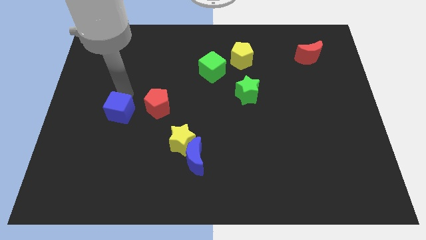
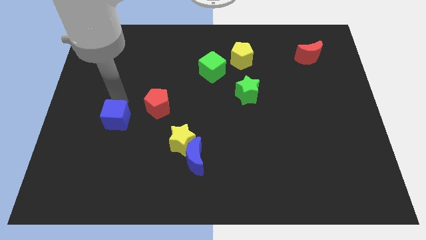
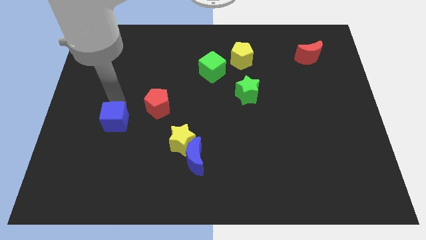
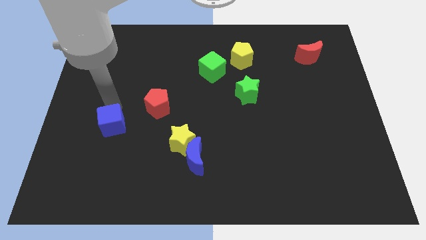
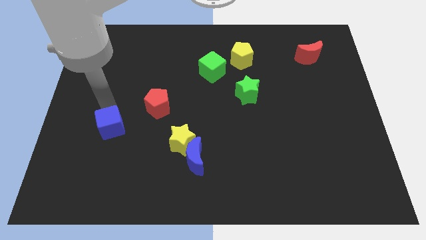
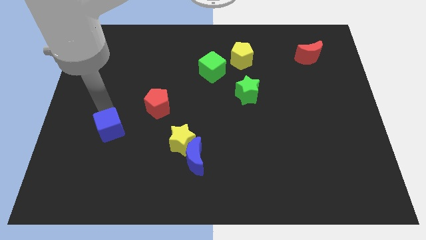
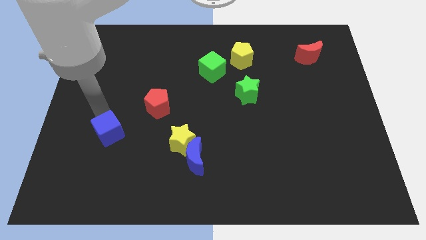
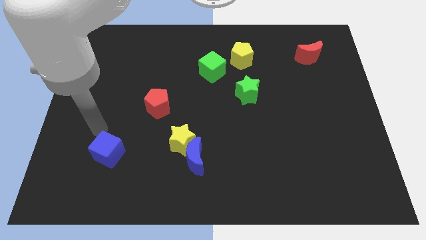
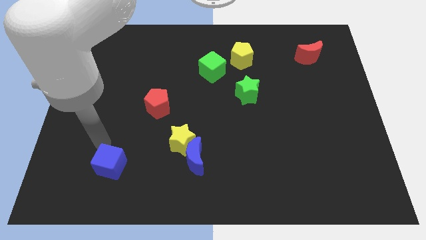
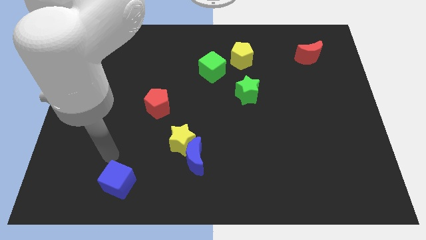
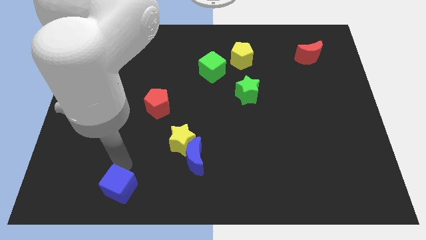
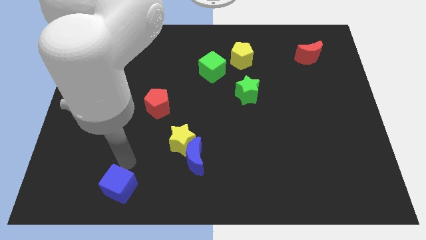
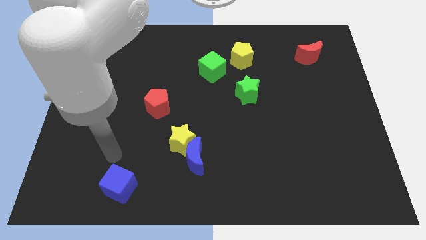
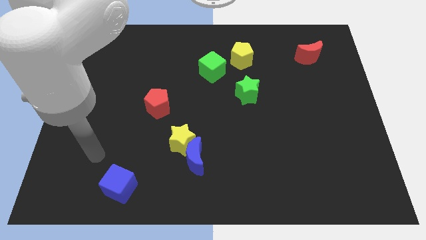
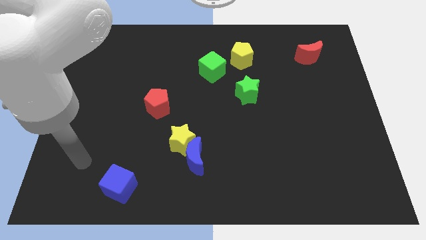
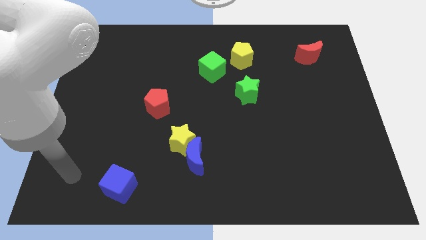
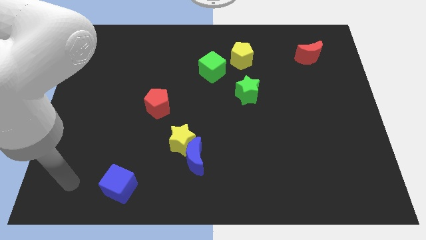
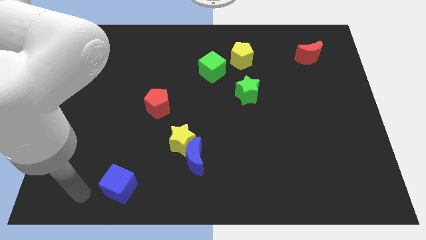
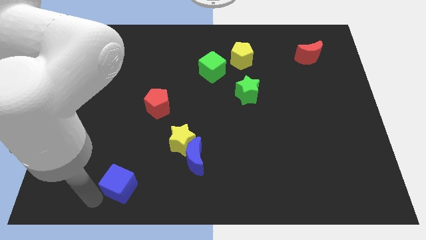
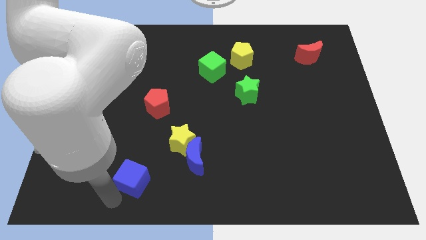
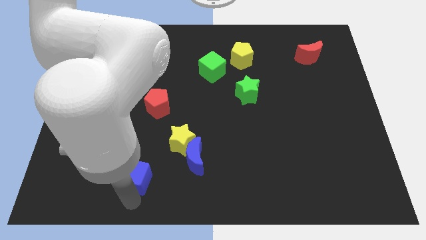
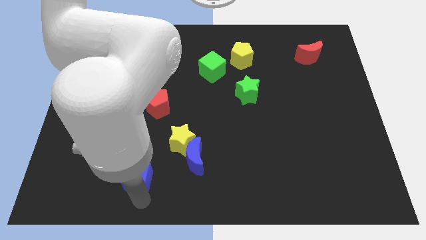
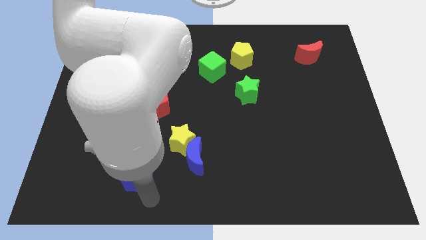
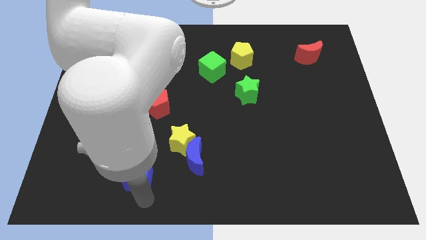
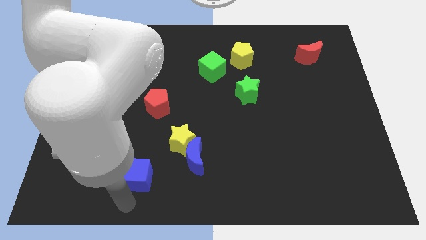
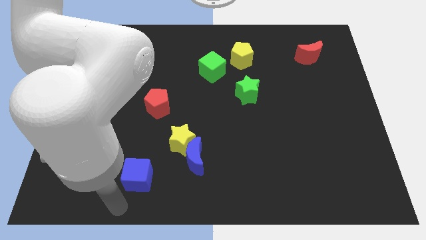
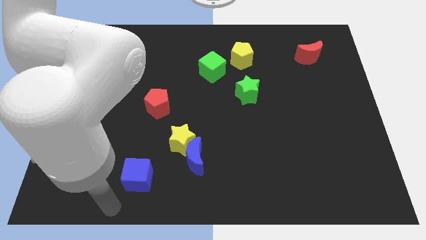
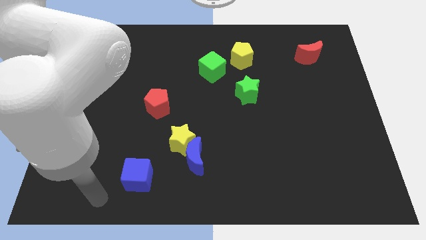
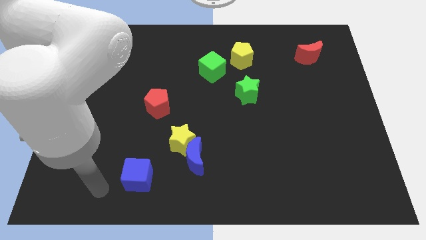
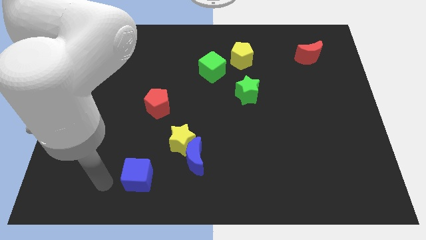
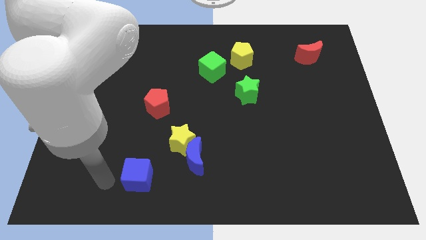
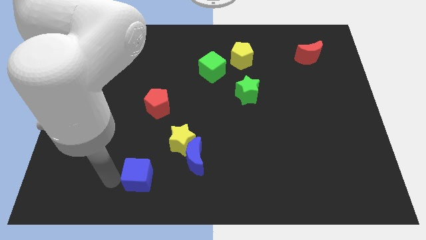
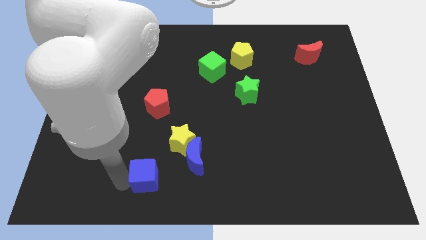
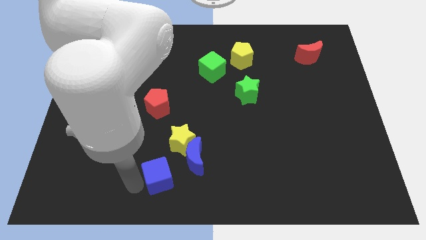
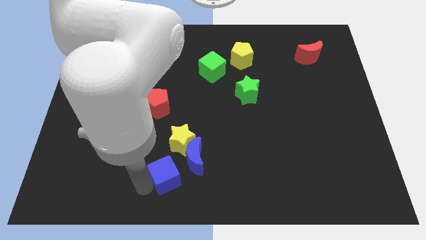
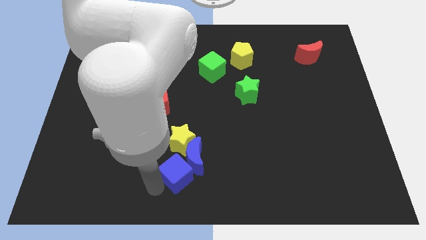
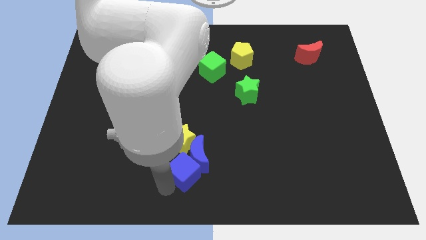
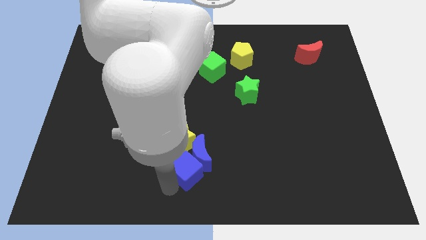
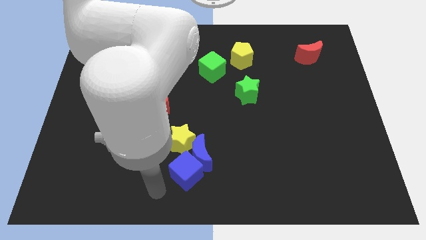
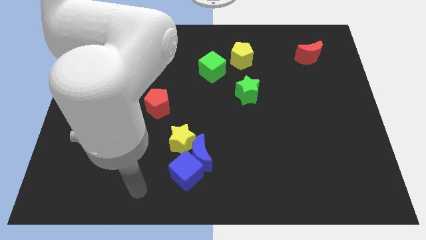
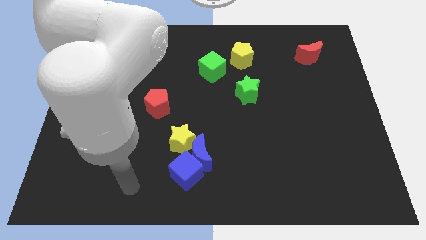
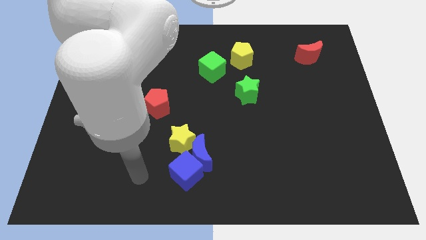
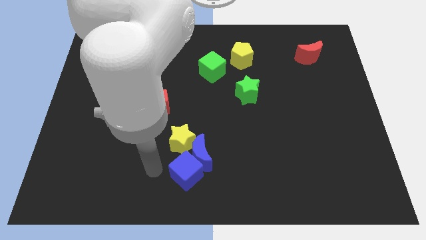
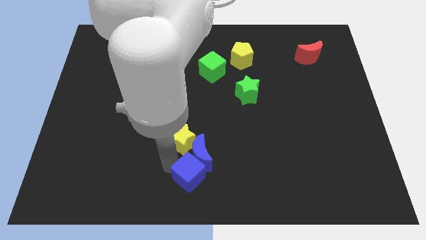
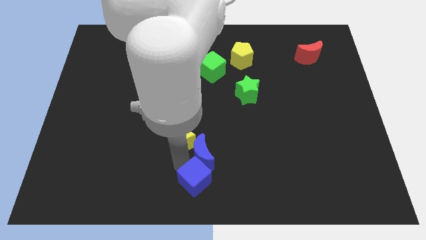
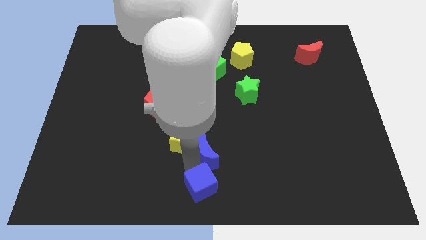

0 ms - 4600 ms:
push the blue cube into the blue moon

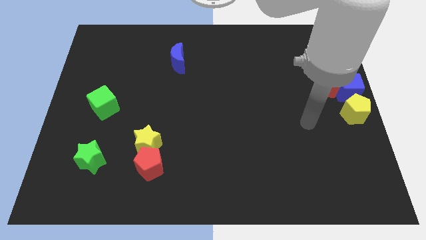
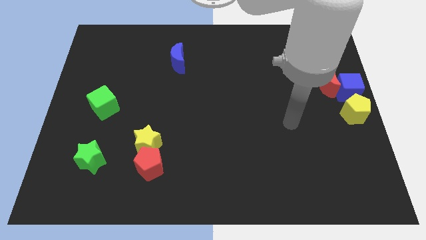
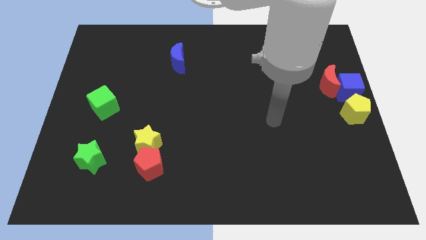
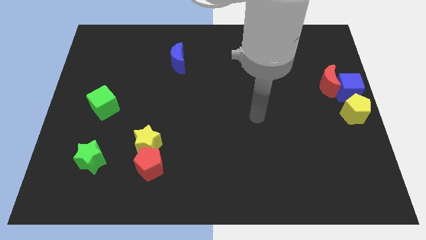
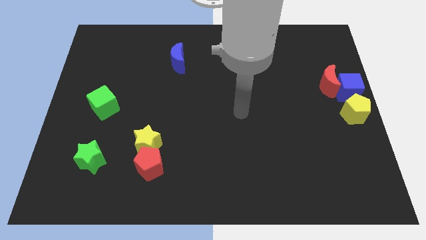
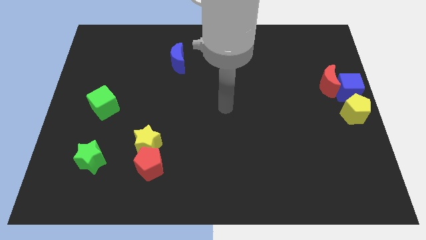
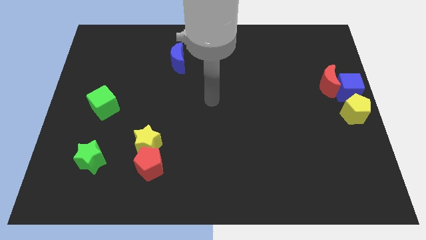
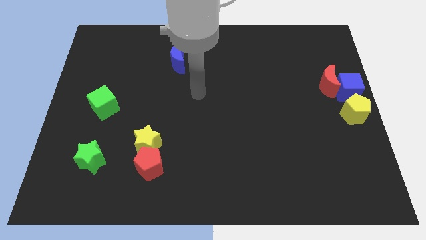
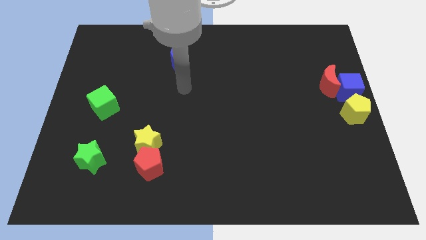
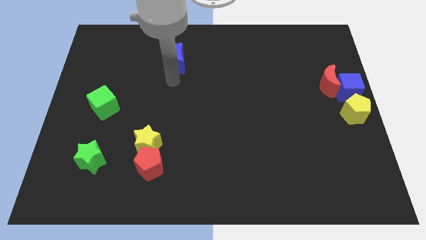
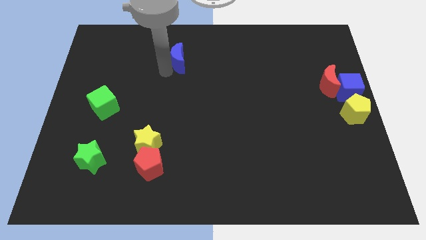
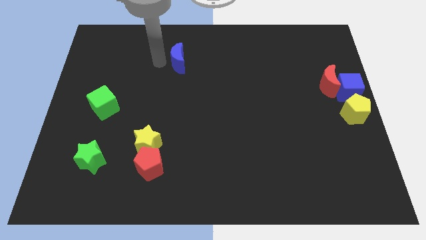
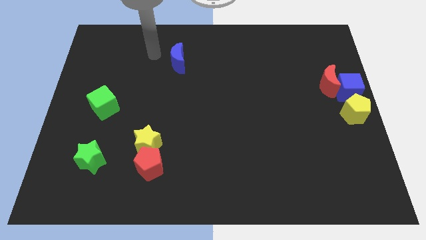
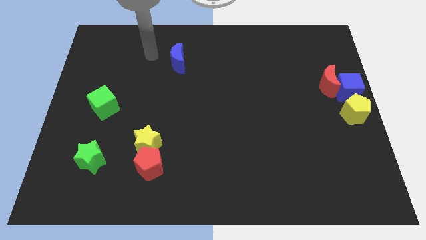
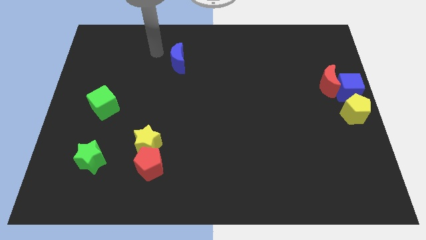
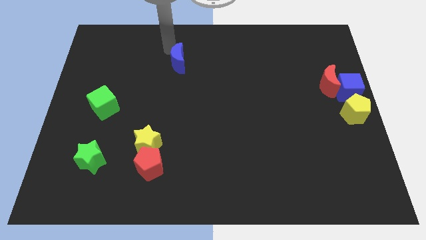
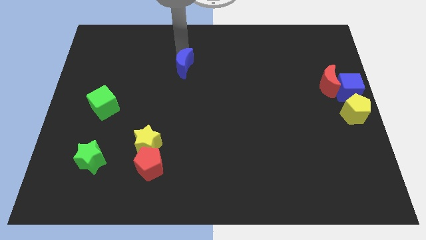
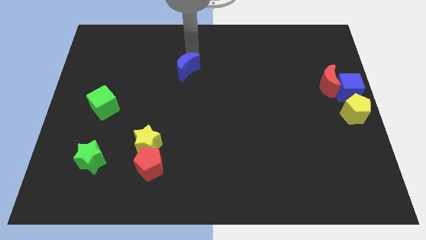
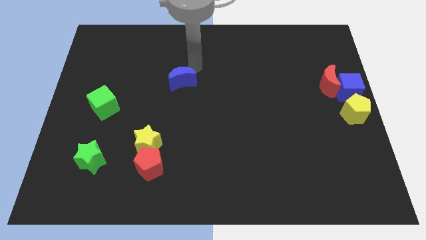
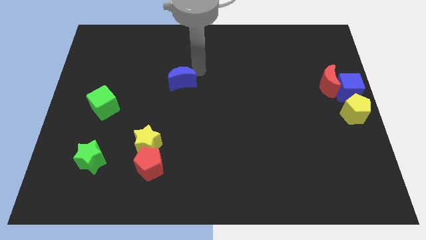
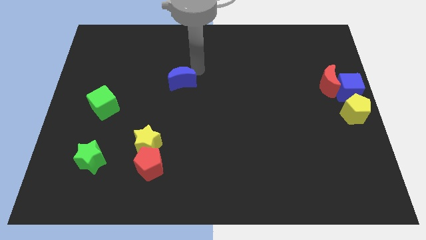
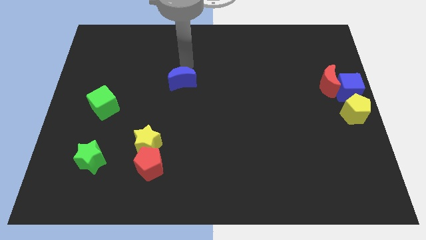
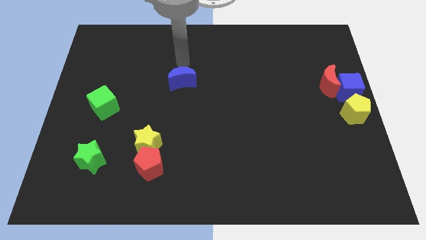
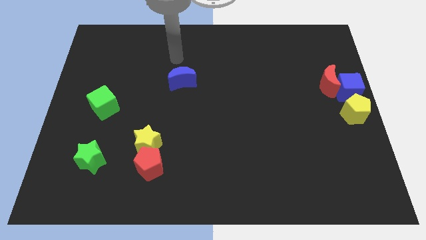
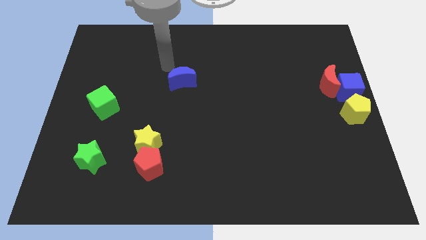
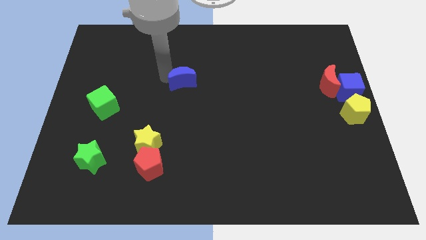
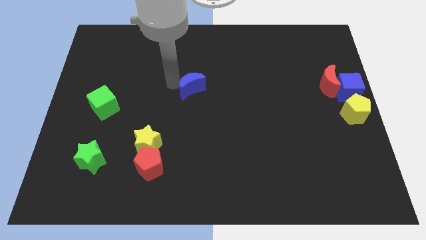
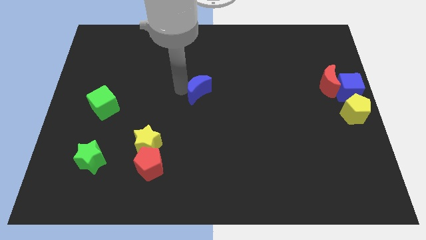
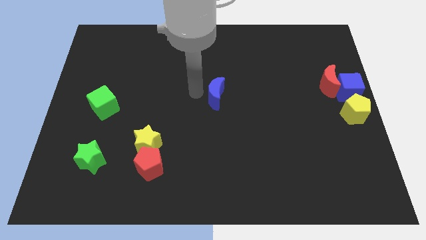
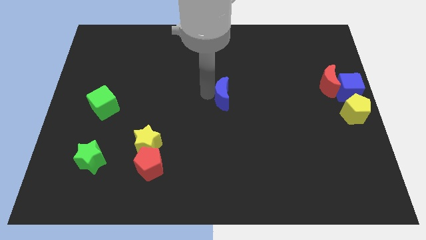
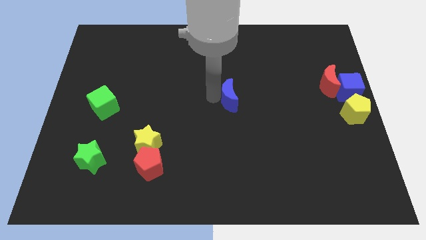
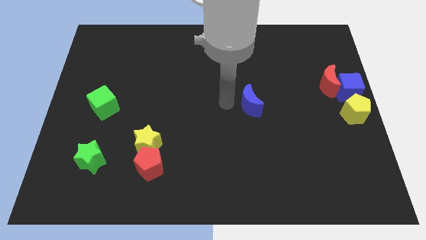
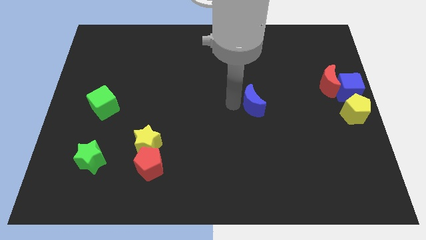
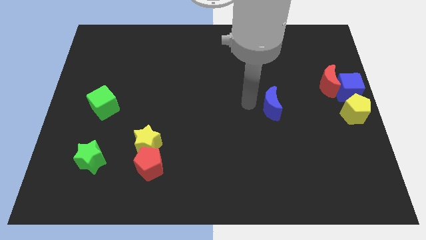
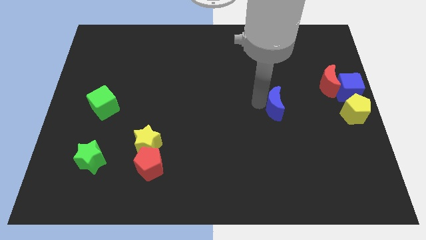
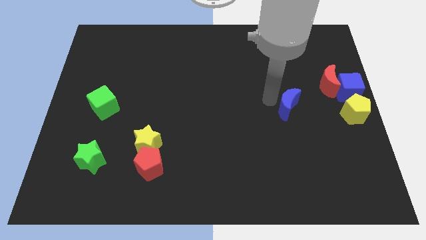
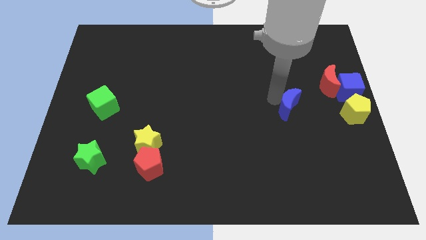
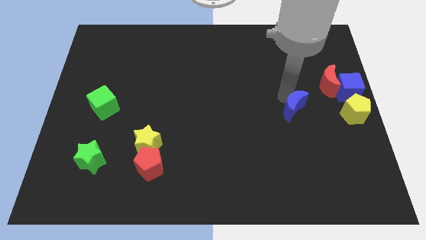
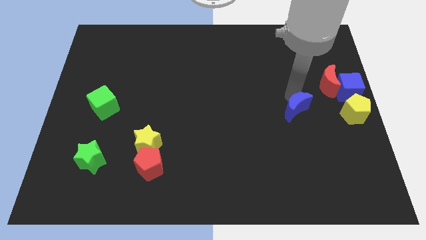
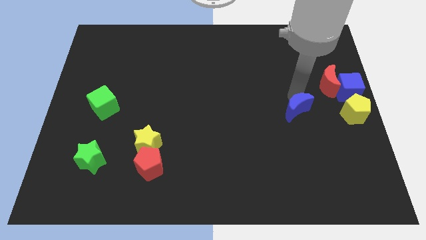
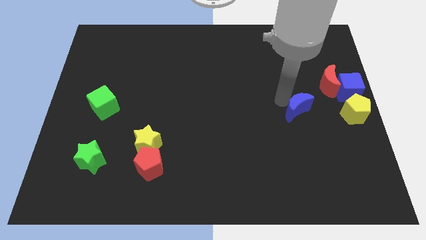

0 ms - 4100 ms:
place blue moon to left of yellow pentagon
